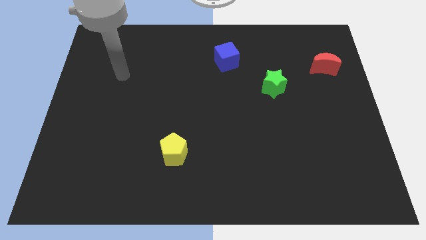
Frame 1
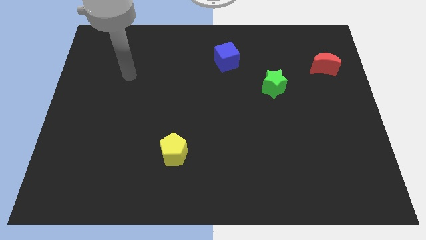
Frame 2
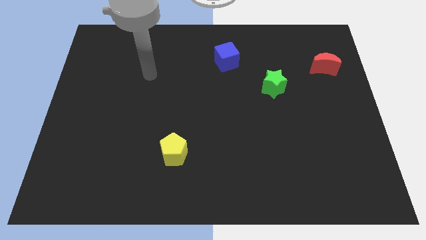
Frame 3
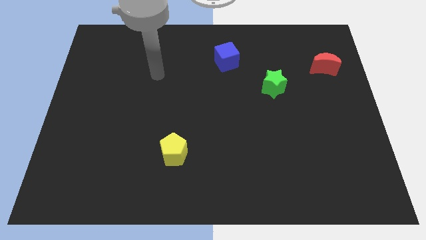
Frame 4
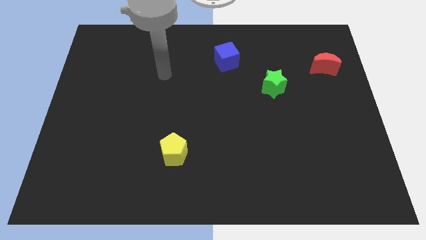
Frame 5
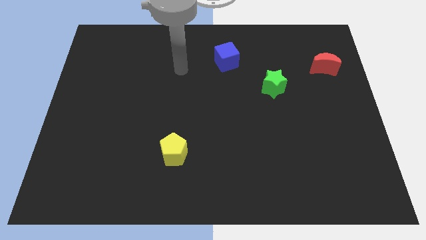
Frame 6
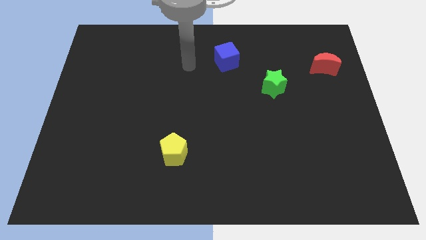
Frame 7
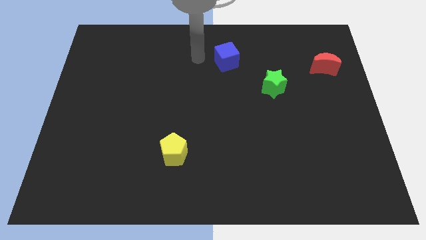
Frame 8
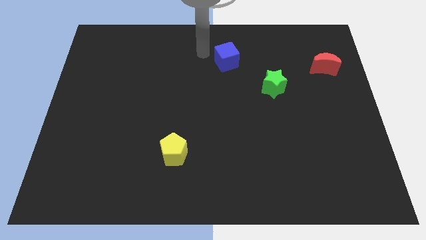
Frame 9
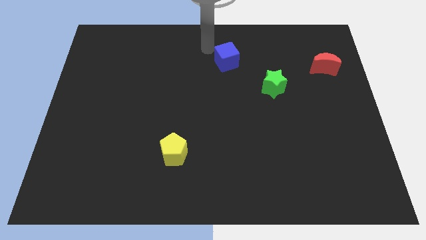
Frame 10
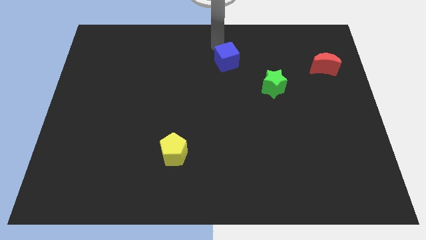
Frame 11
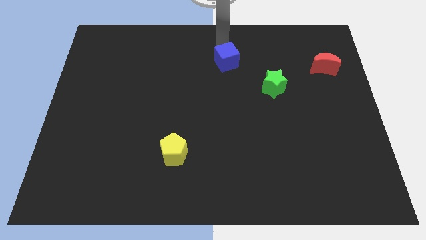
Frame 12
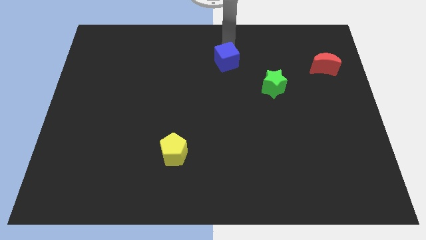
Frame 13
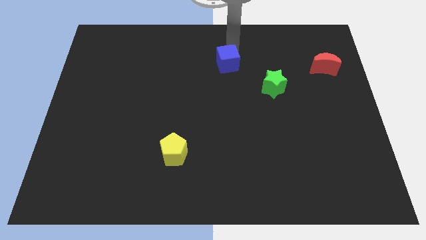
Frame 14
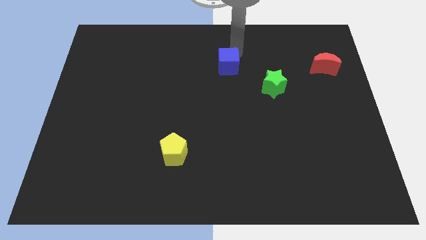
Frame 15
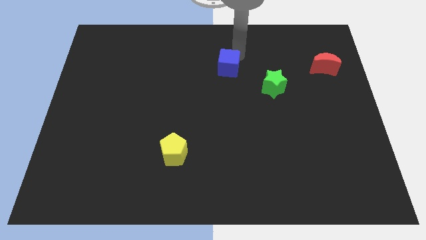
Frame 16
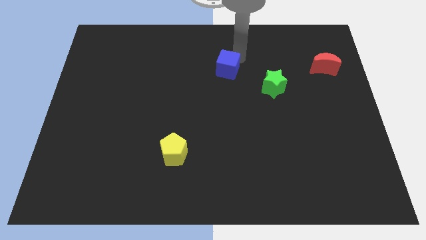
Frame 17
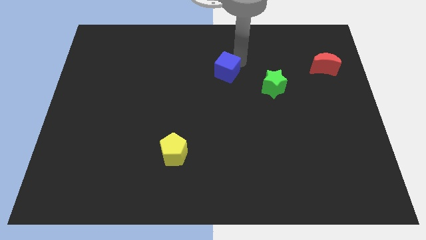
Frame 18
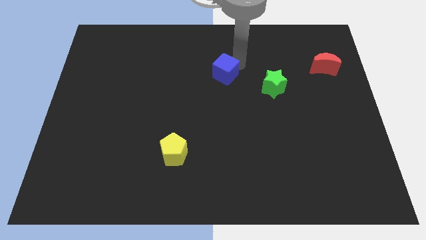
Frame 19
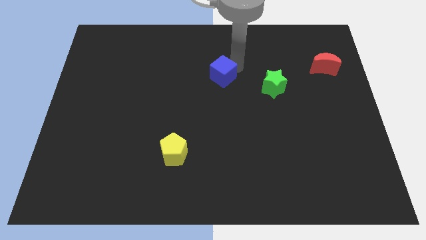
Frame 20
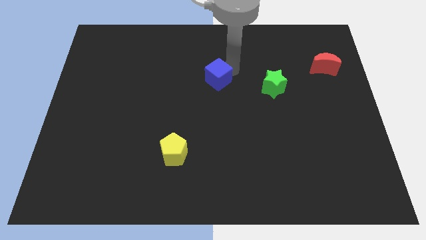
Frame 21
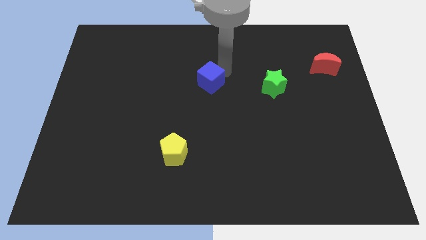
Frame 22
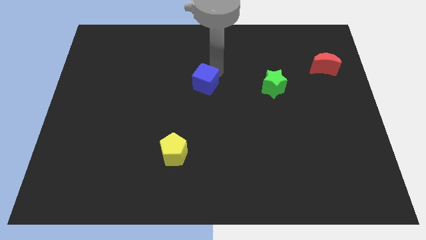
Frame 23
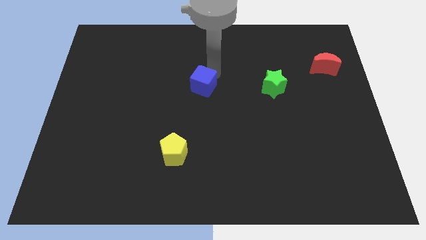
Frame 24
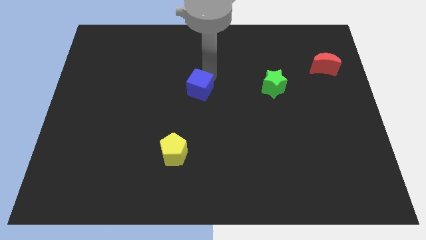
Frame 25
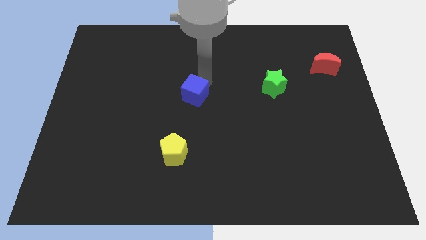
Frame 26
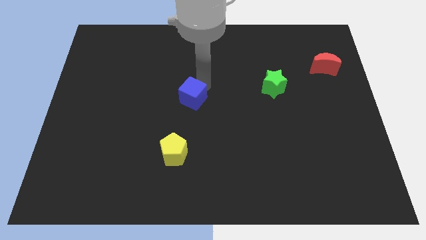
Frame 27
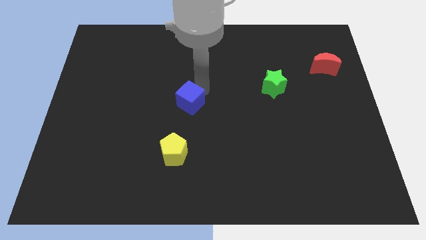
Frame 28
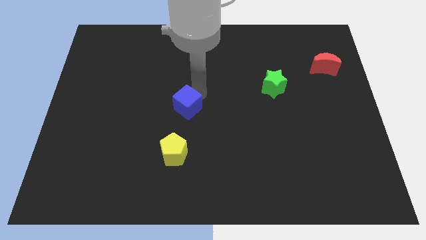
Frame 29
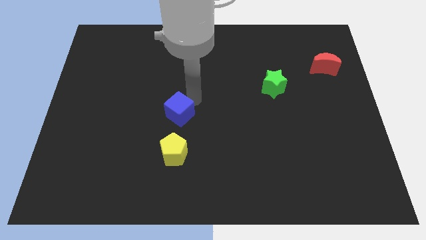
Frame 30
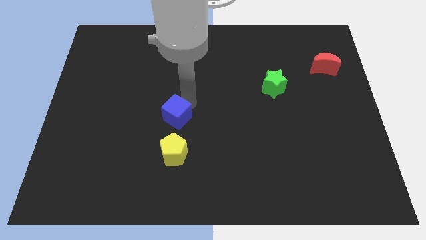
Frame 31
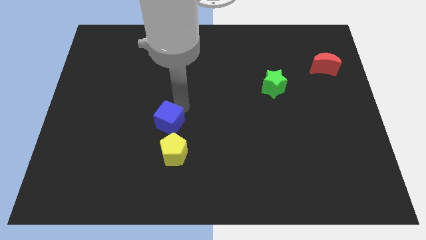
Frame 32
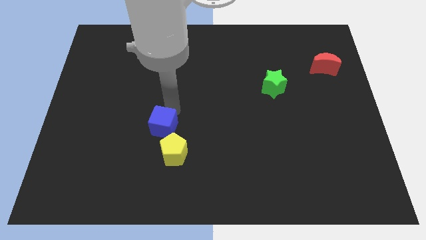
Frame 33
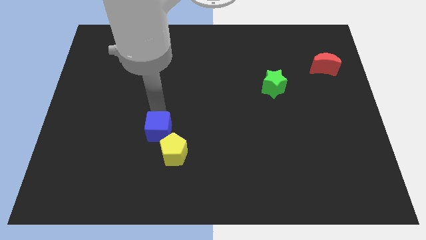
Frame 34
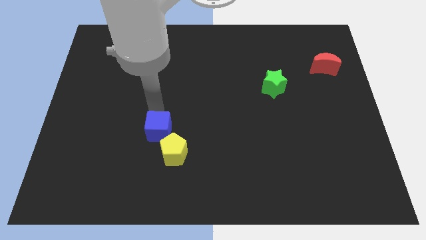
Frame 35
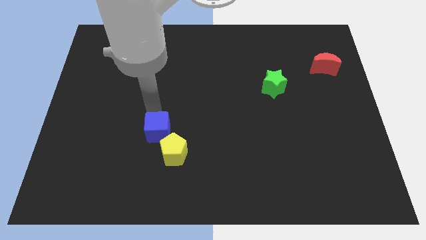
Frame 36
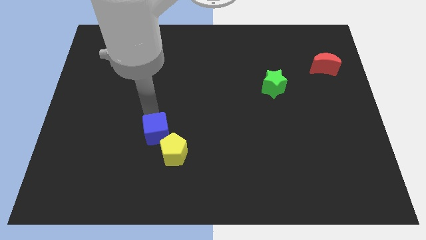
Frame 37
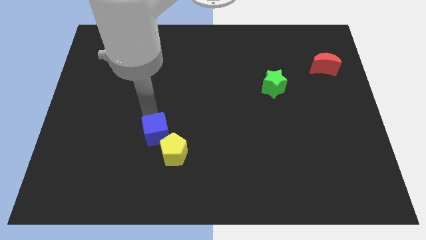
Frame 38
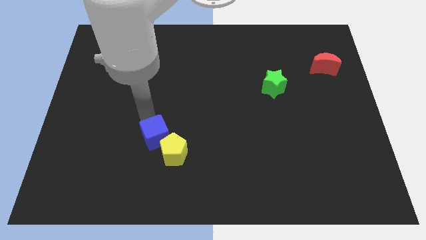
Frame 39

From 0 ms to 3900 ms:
move the blue block to the yellow block

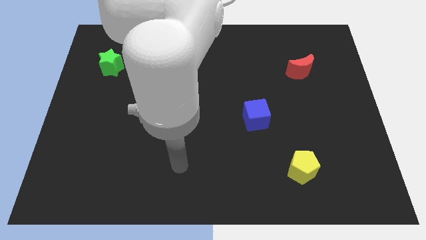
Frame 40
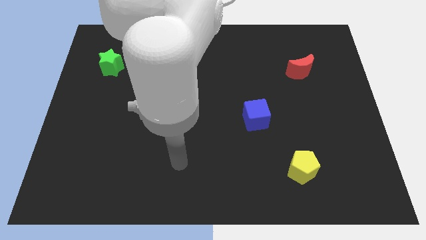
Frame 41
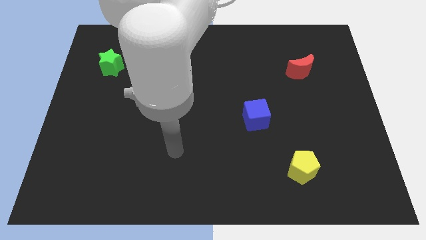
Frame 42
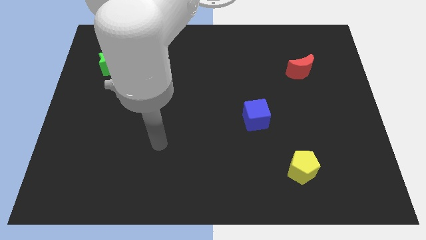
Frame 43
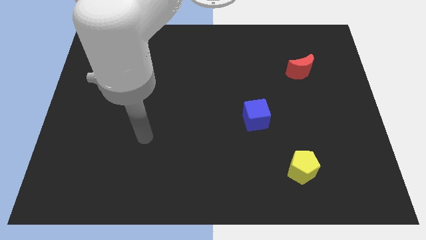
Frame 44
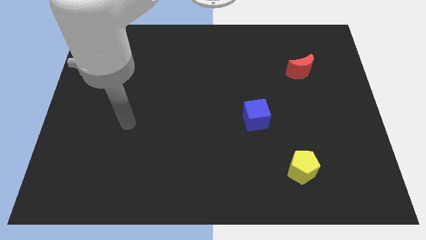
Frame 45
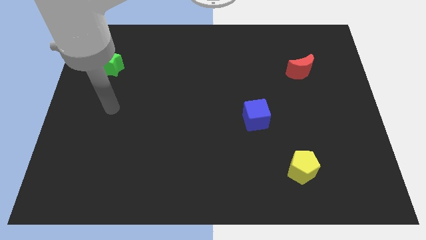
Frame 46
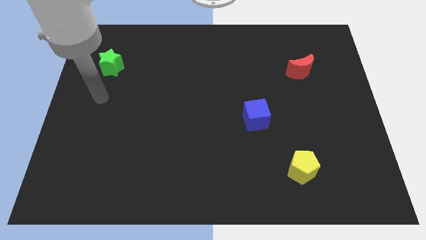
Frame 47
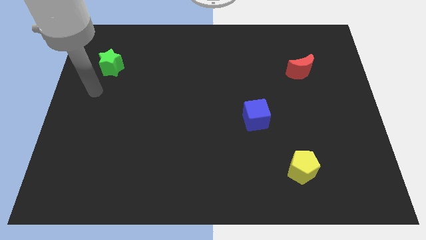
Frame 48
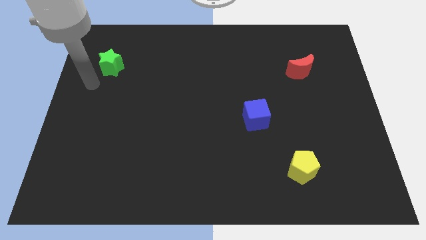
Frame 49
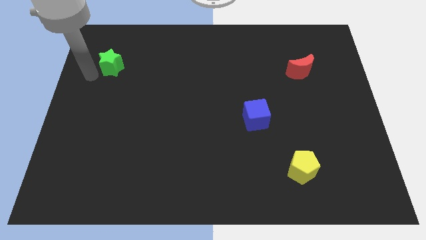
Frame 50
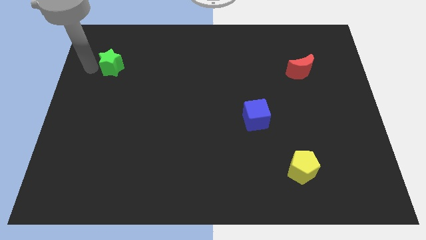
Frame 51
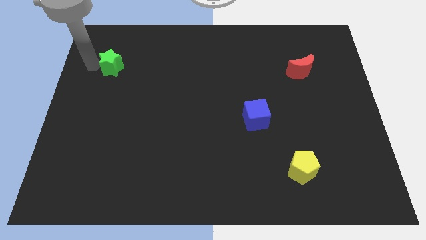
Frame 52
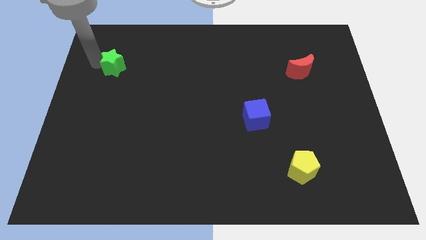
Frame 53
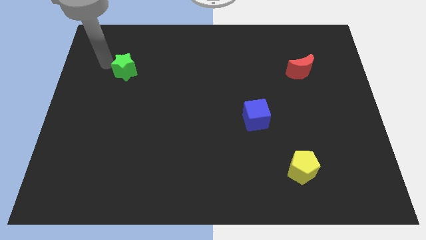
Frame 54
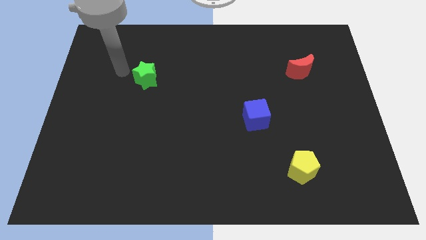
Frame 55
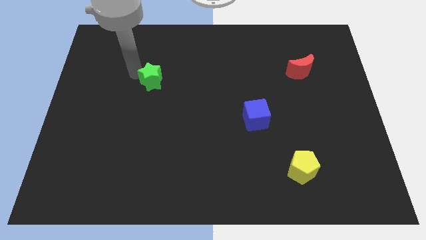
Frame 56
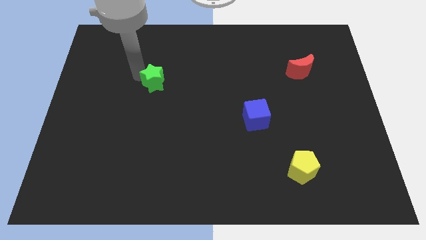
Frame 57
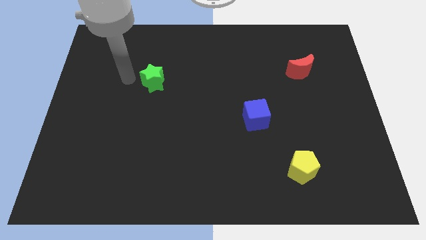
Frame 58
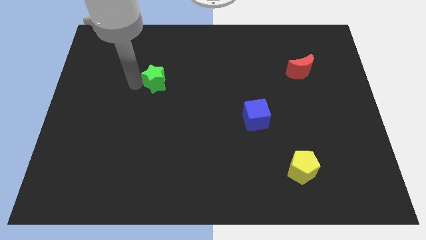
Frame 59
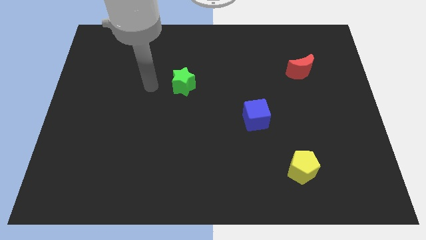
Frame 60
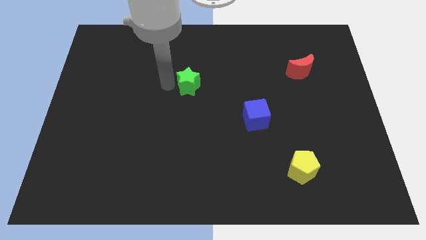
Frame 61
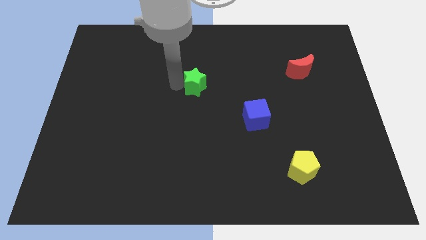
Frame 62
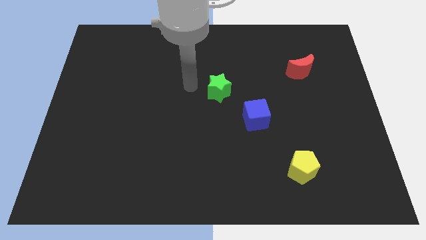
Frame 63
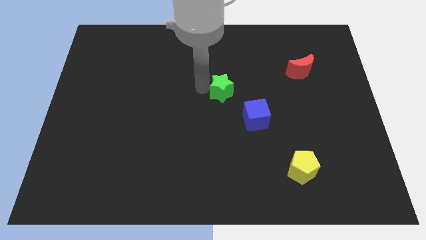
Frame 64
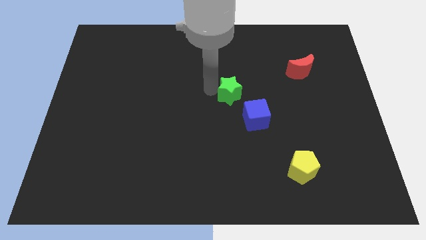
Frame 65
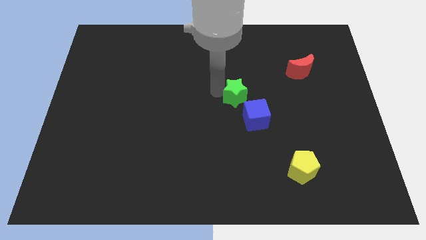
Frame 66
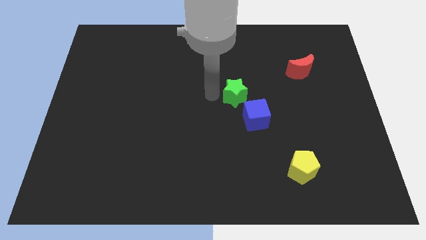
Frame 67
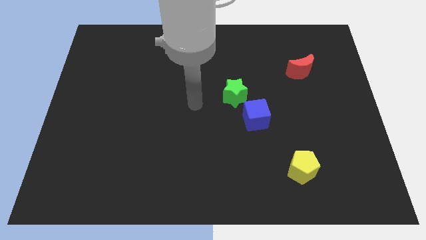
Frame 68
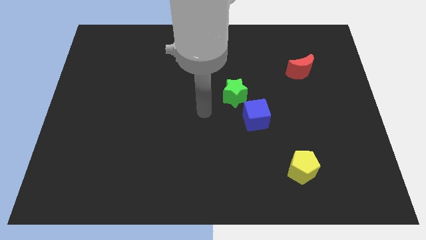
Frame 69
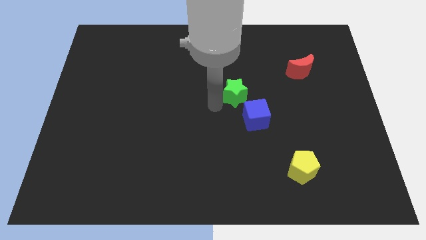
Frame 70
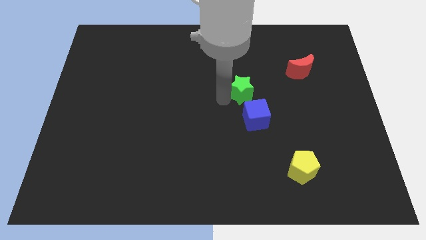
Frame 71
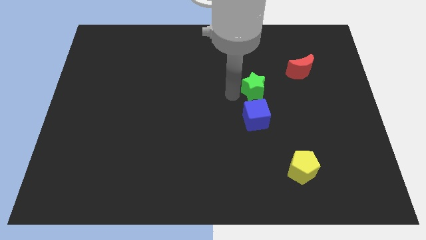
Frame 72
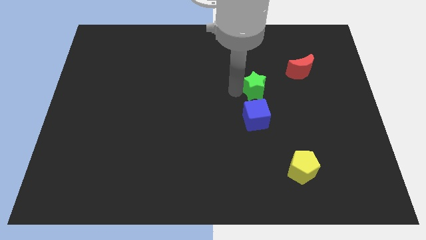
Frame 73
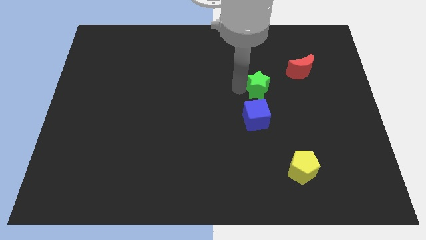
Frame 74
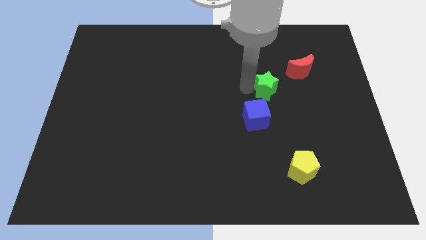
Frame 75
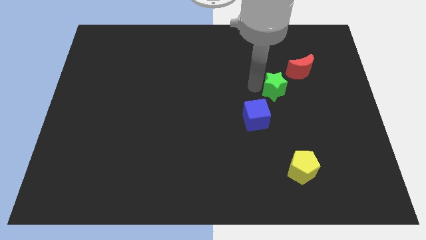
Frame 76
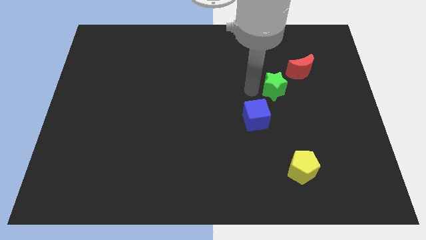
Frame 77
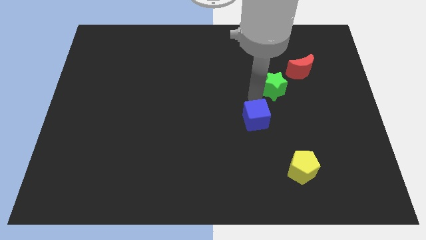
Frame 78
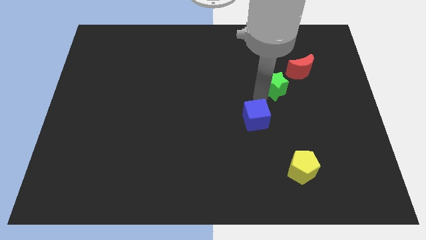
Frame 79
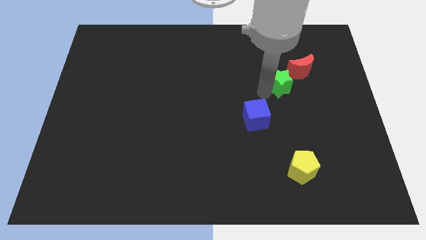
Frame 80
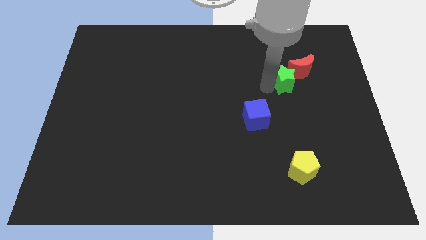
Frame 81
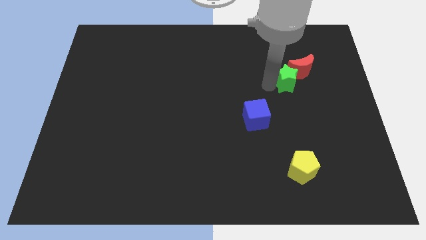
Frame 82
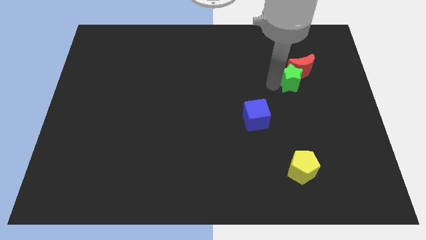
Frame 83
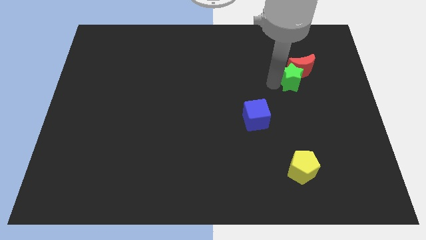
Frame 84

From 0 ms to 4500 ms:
move the star close to the red block
